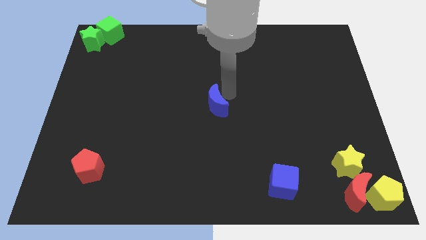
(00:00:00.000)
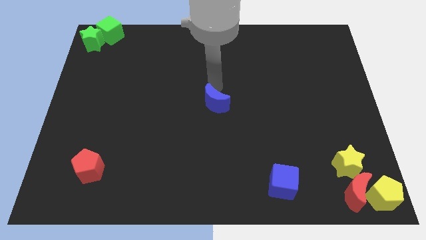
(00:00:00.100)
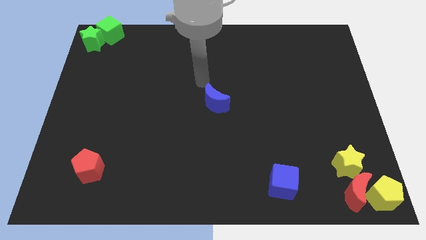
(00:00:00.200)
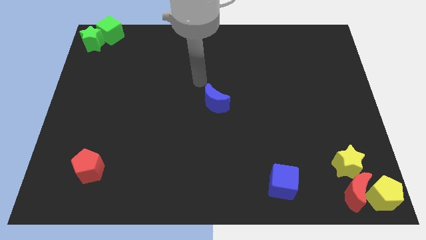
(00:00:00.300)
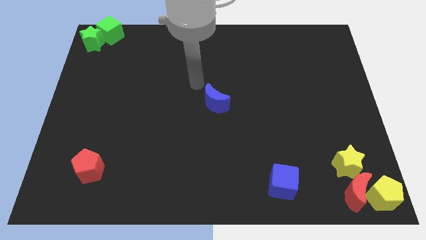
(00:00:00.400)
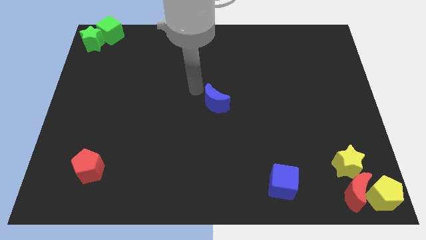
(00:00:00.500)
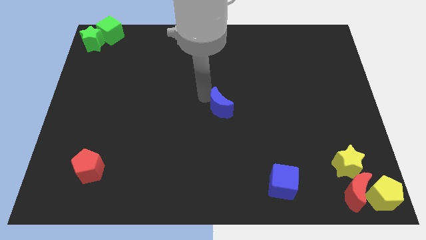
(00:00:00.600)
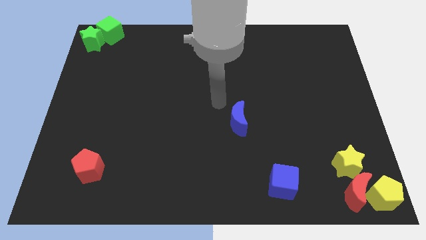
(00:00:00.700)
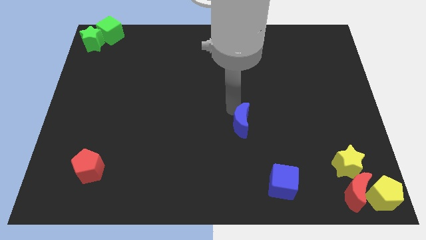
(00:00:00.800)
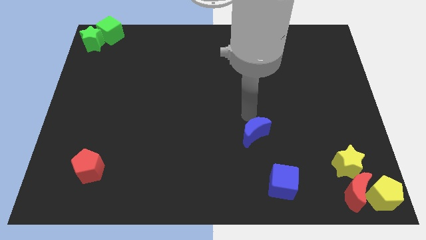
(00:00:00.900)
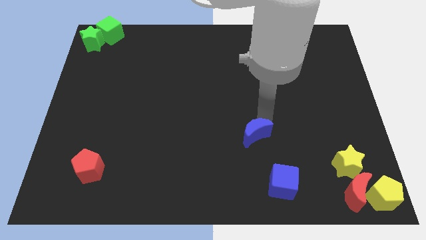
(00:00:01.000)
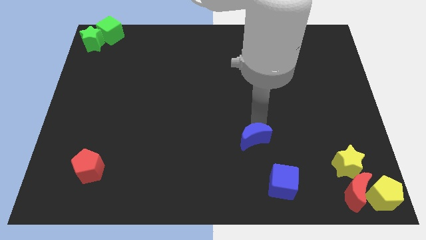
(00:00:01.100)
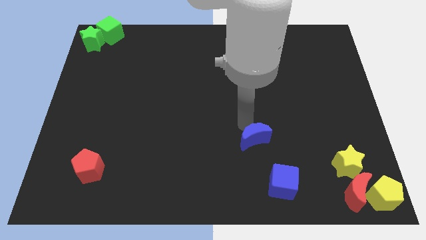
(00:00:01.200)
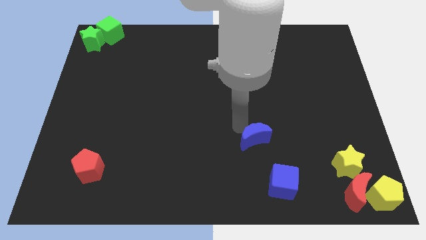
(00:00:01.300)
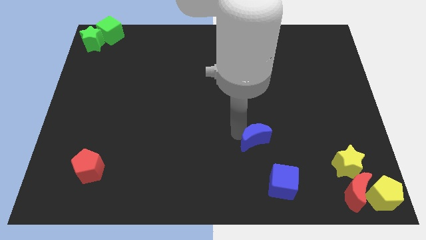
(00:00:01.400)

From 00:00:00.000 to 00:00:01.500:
place the blue crescent diagonally to the blue cube

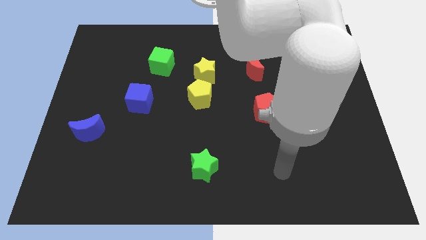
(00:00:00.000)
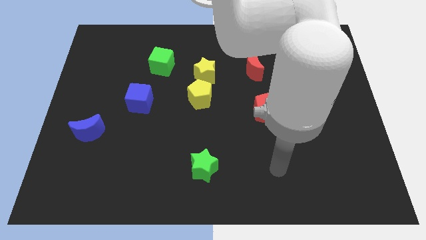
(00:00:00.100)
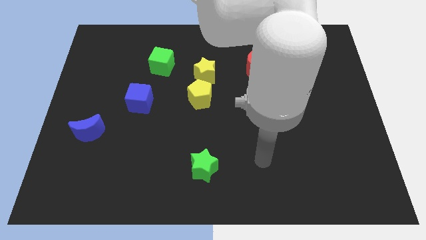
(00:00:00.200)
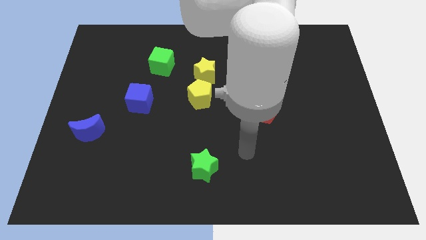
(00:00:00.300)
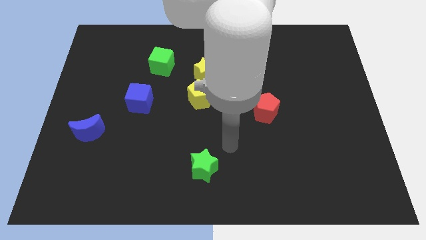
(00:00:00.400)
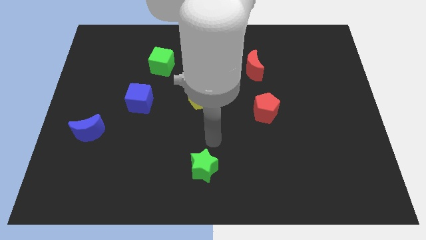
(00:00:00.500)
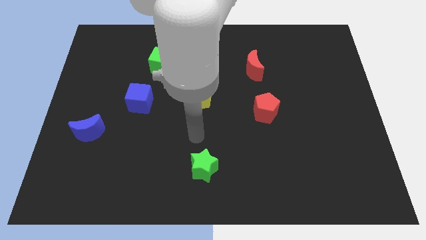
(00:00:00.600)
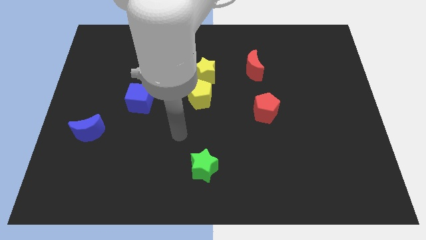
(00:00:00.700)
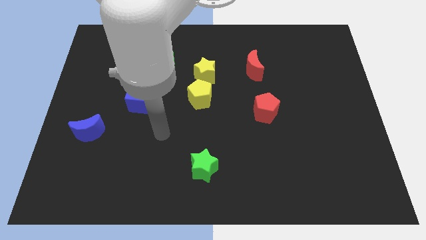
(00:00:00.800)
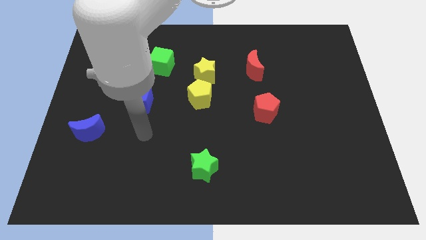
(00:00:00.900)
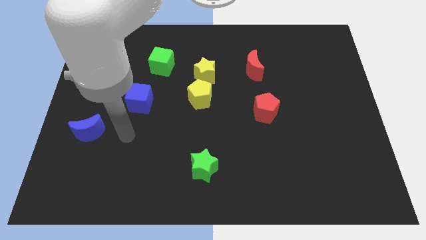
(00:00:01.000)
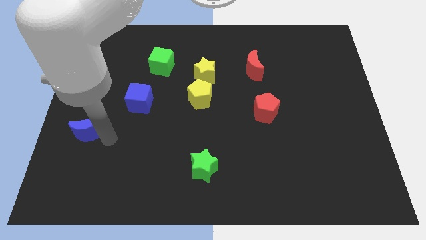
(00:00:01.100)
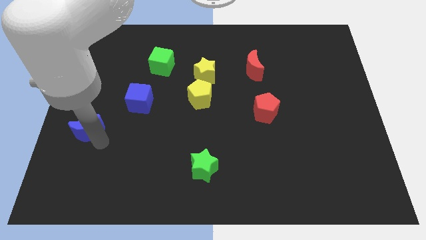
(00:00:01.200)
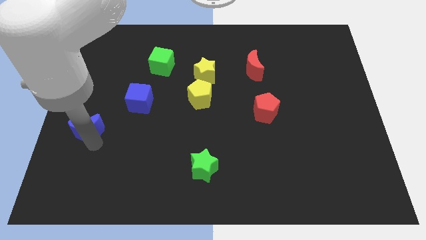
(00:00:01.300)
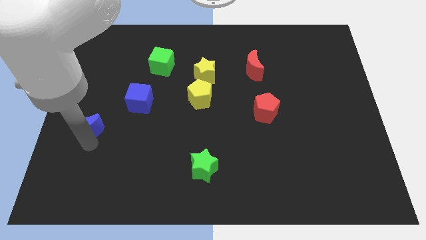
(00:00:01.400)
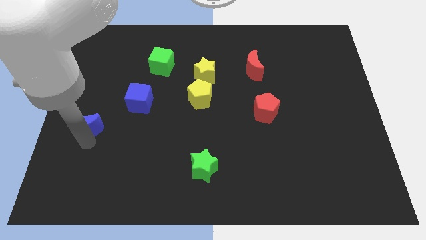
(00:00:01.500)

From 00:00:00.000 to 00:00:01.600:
place your hand below the blue crescent

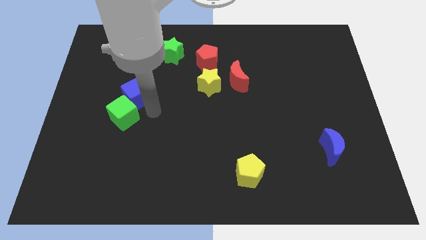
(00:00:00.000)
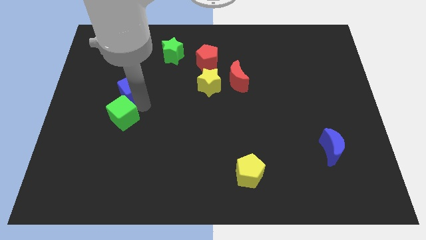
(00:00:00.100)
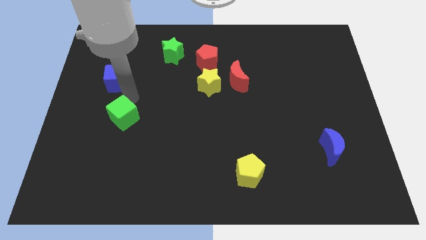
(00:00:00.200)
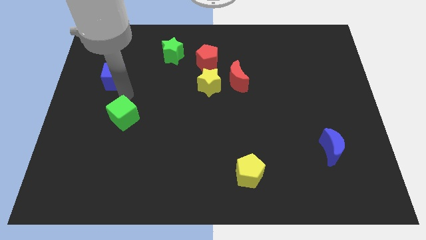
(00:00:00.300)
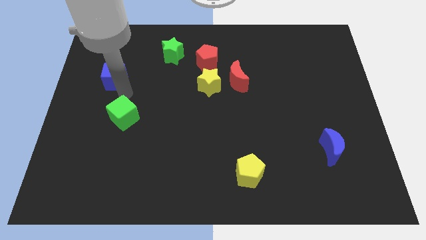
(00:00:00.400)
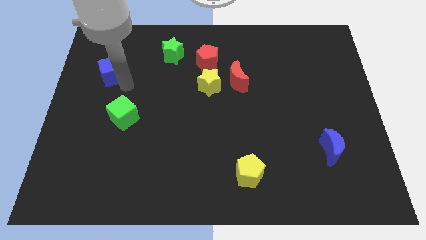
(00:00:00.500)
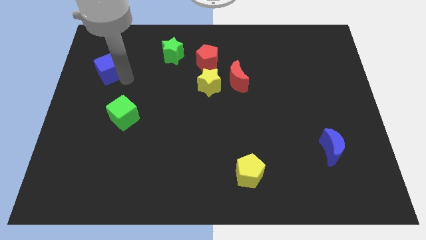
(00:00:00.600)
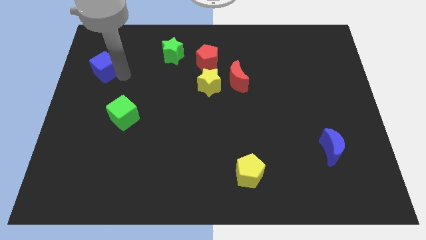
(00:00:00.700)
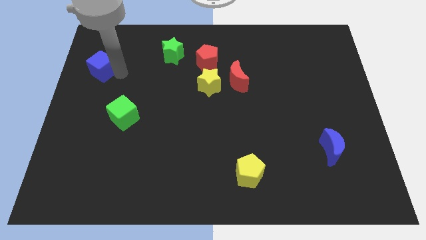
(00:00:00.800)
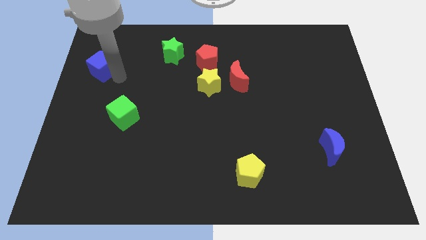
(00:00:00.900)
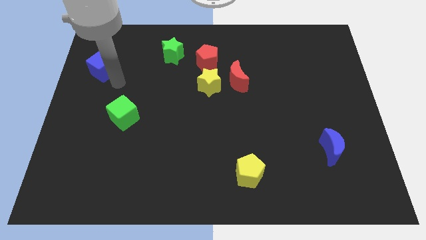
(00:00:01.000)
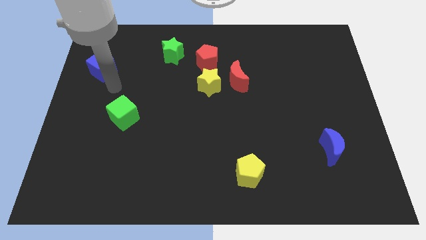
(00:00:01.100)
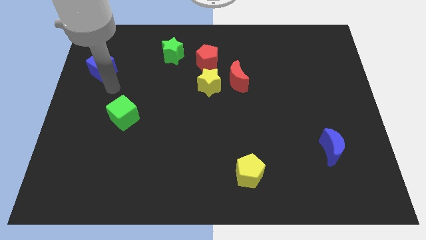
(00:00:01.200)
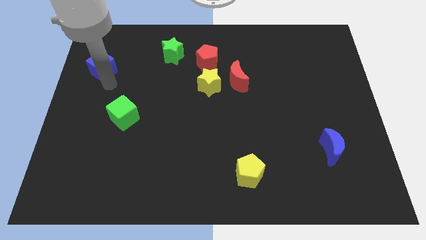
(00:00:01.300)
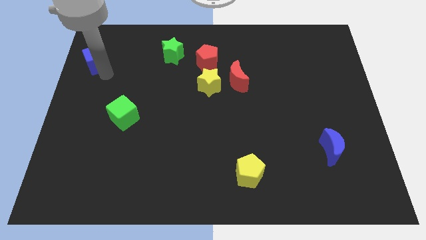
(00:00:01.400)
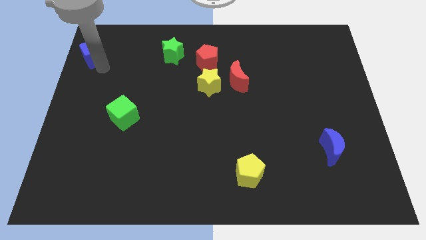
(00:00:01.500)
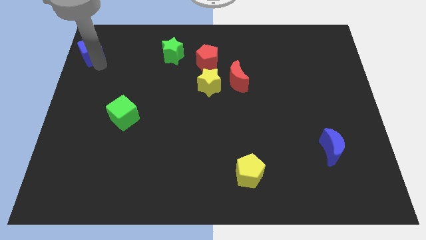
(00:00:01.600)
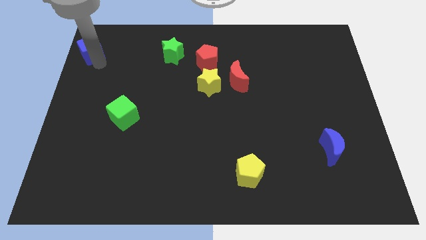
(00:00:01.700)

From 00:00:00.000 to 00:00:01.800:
move the blue cube horizontally left to the green star

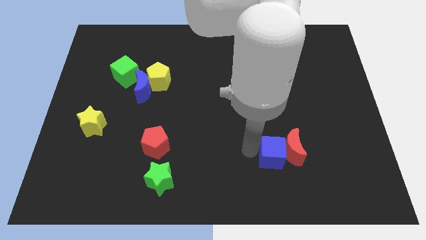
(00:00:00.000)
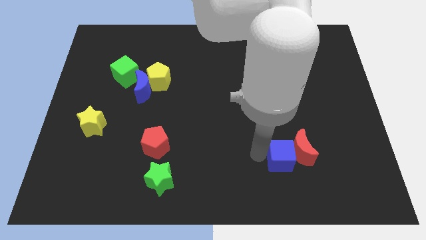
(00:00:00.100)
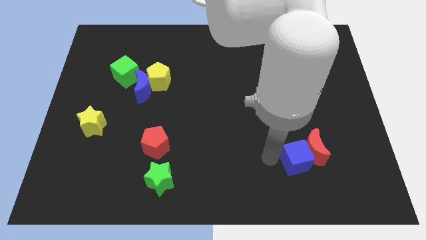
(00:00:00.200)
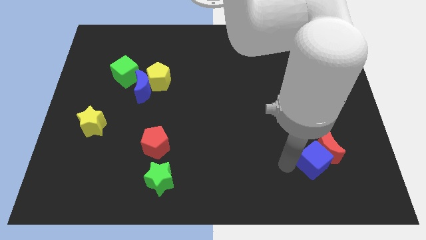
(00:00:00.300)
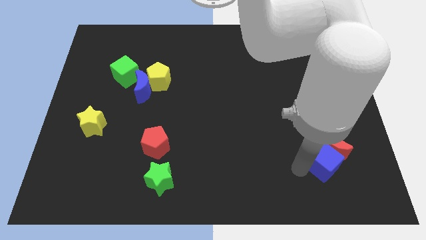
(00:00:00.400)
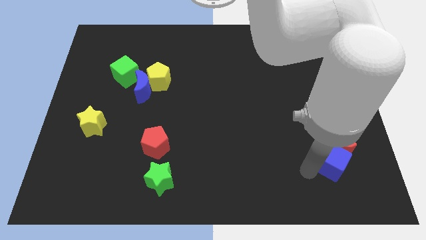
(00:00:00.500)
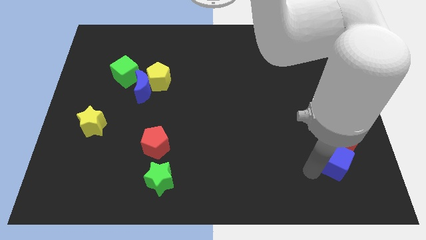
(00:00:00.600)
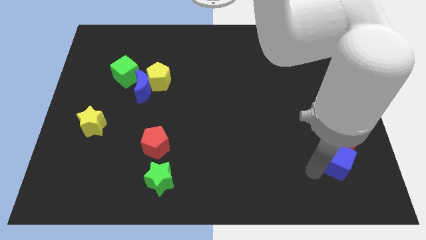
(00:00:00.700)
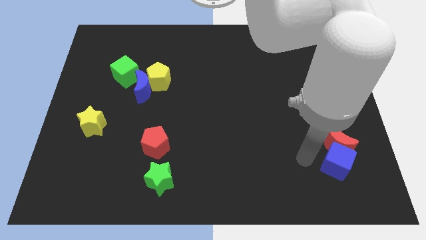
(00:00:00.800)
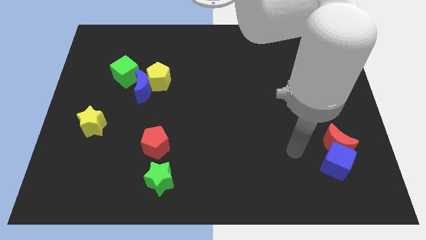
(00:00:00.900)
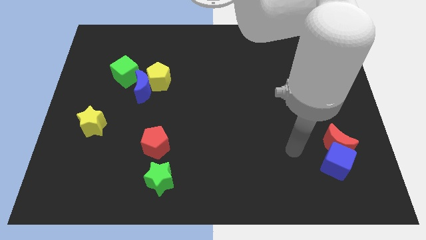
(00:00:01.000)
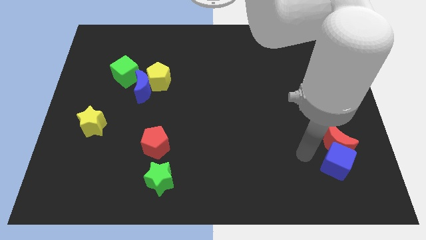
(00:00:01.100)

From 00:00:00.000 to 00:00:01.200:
move the blue cube below the red crescent

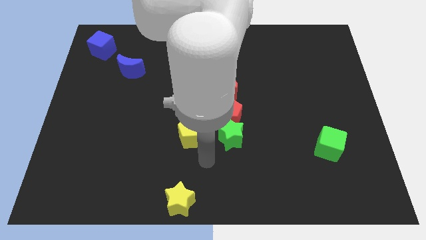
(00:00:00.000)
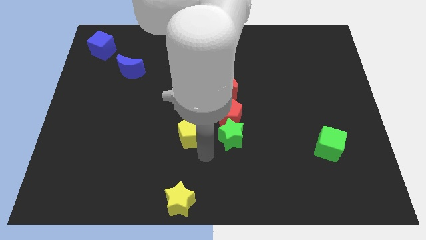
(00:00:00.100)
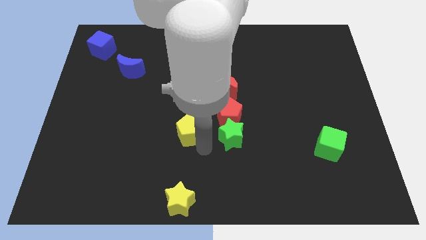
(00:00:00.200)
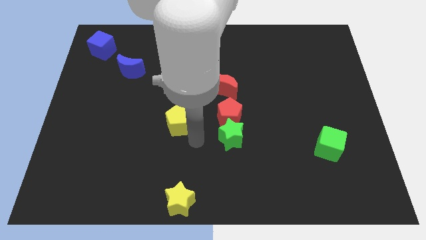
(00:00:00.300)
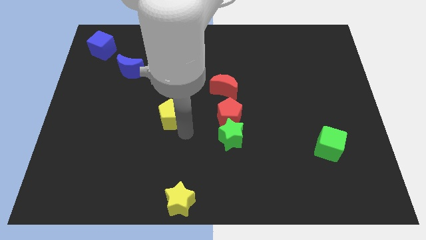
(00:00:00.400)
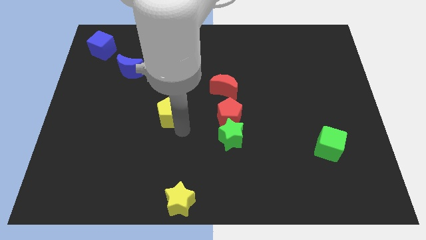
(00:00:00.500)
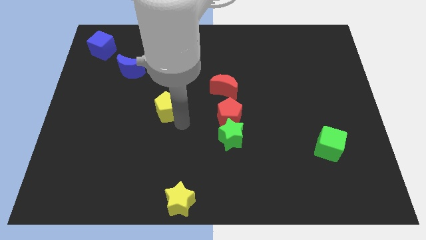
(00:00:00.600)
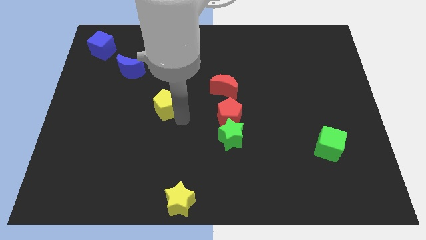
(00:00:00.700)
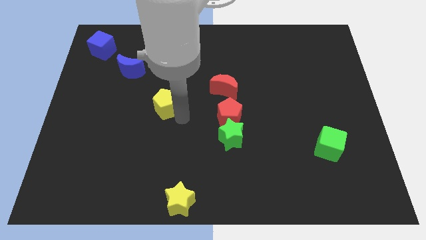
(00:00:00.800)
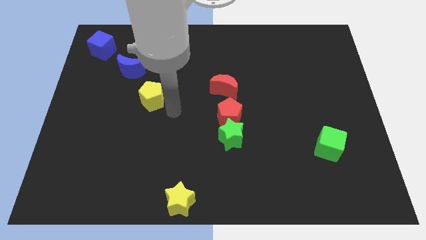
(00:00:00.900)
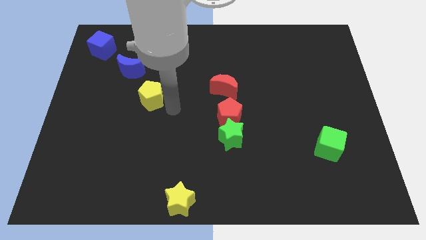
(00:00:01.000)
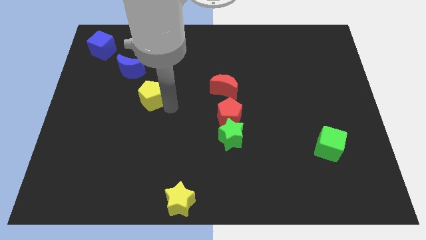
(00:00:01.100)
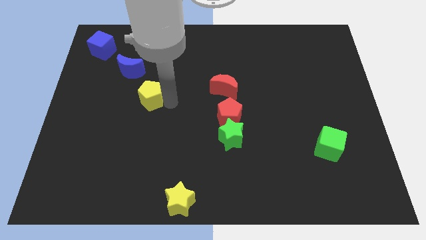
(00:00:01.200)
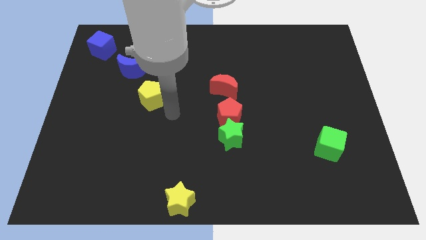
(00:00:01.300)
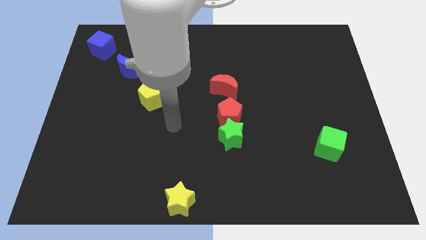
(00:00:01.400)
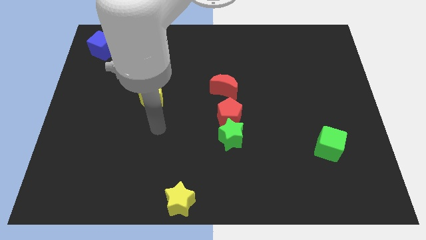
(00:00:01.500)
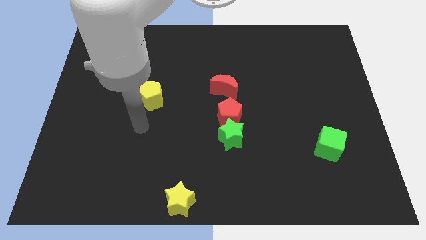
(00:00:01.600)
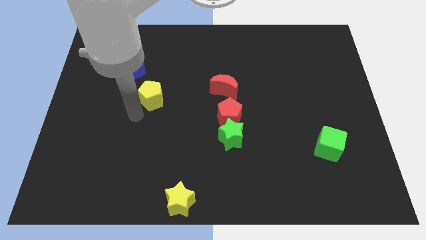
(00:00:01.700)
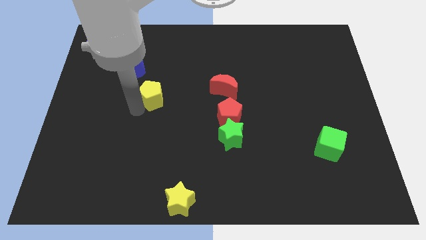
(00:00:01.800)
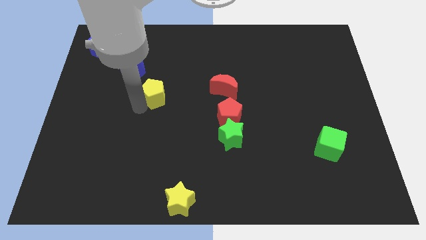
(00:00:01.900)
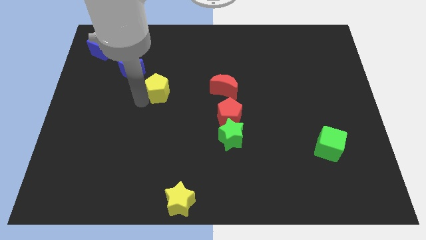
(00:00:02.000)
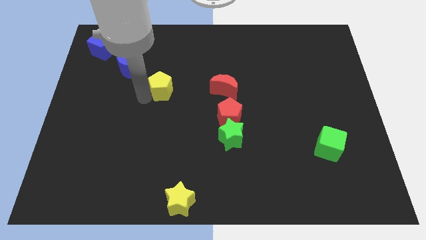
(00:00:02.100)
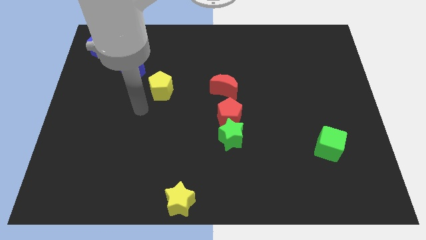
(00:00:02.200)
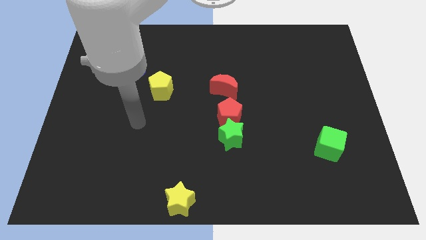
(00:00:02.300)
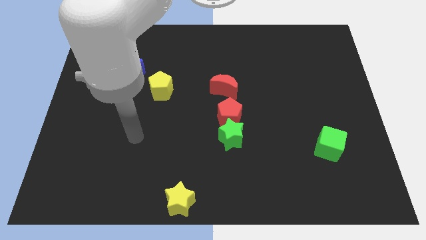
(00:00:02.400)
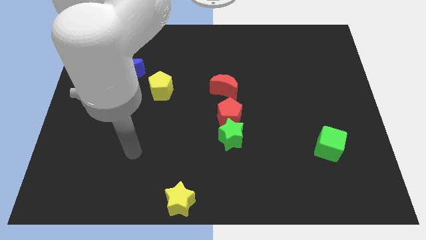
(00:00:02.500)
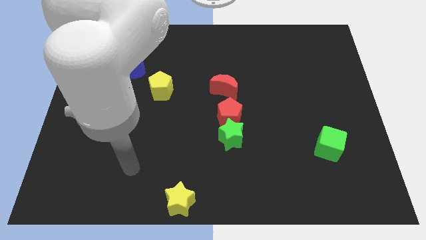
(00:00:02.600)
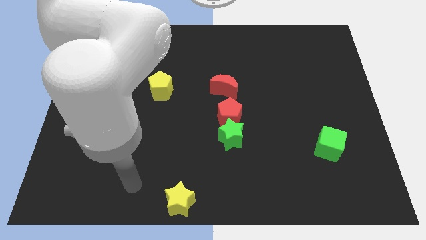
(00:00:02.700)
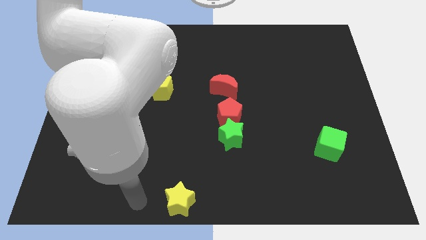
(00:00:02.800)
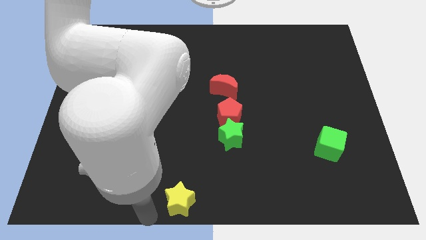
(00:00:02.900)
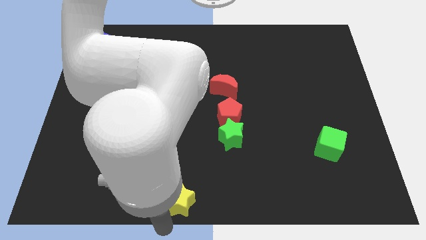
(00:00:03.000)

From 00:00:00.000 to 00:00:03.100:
push the yellow pentagon towards the blue crescent
